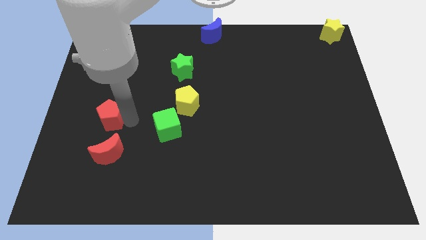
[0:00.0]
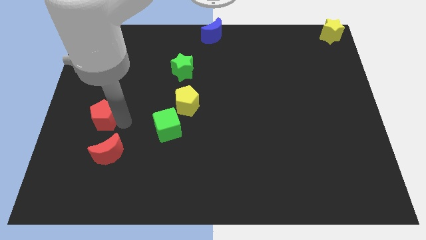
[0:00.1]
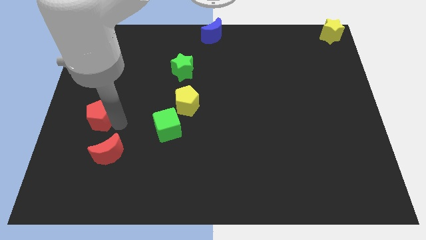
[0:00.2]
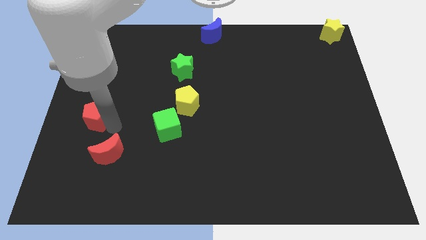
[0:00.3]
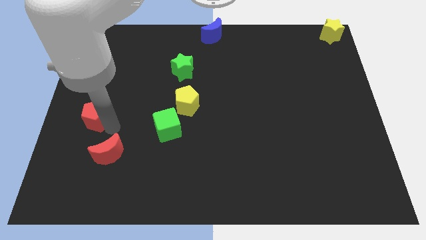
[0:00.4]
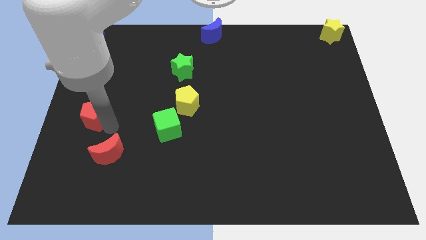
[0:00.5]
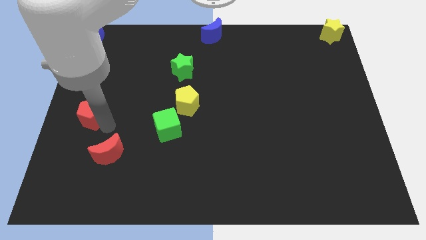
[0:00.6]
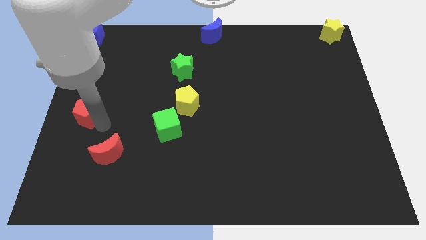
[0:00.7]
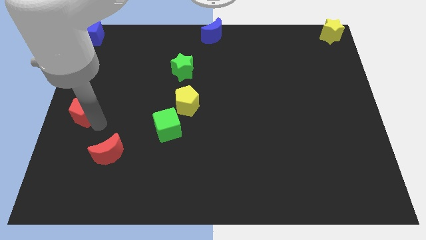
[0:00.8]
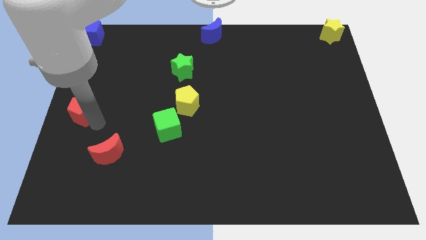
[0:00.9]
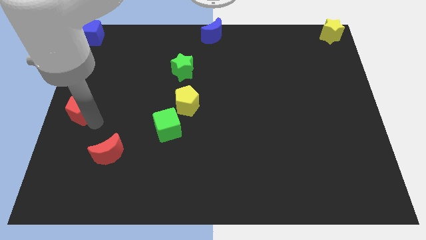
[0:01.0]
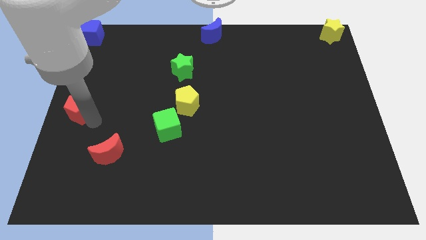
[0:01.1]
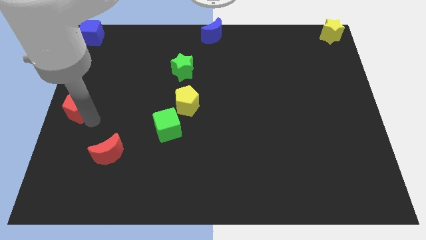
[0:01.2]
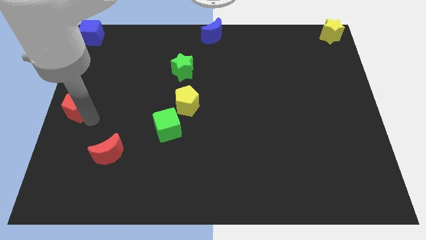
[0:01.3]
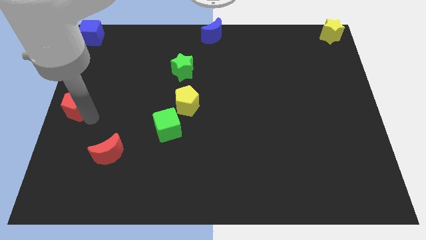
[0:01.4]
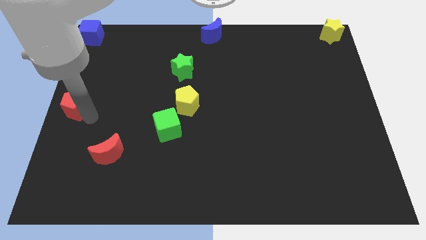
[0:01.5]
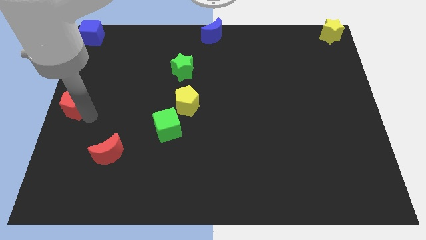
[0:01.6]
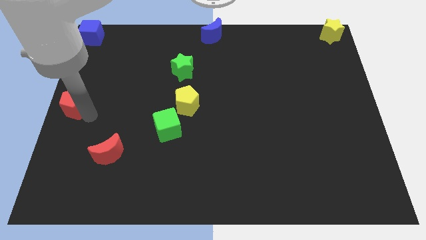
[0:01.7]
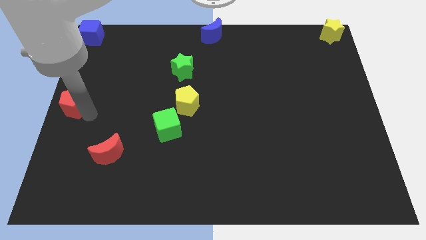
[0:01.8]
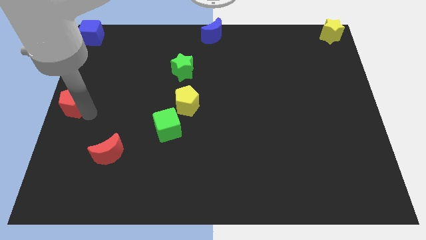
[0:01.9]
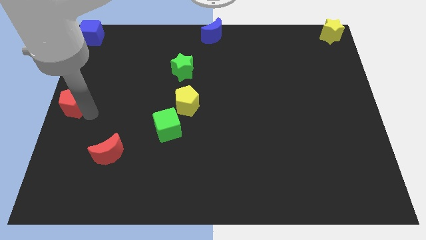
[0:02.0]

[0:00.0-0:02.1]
place the red pentagon towards the left center of the board

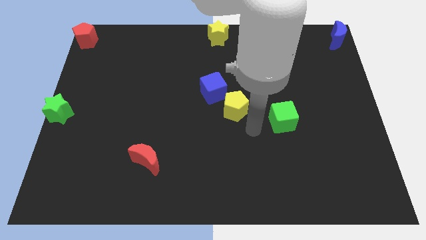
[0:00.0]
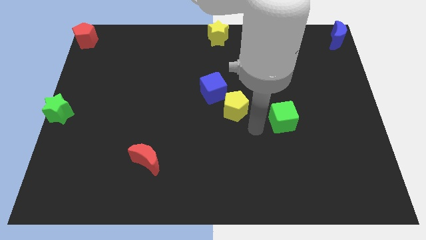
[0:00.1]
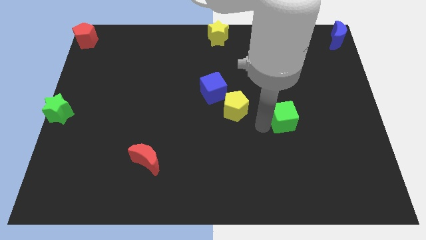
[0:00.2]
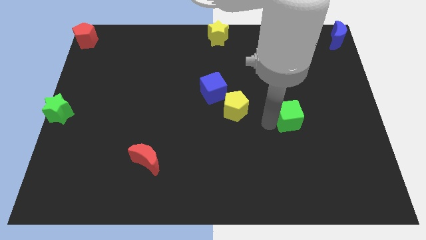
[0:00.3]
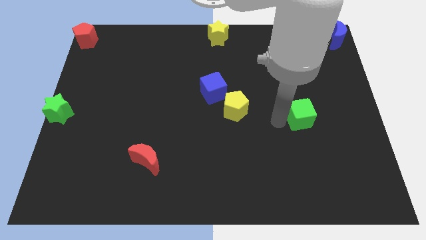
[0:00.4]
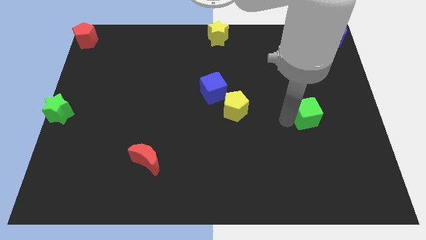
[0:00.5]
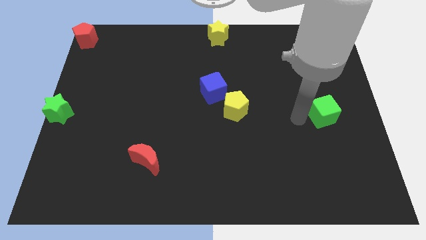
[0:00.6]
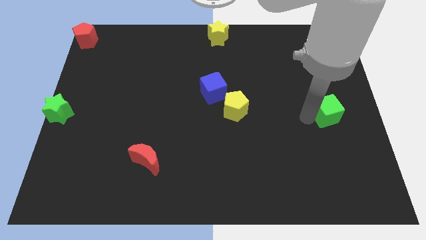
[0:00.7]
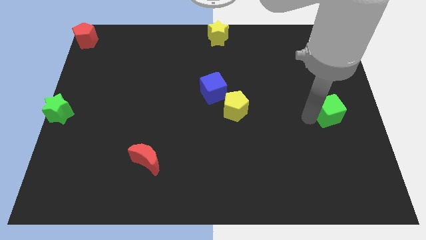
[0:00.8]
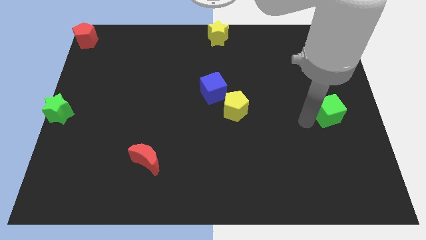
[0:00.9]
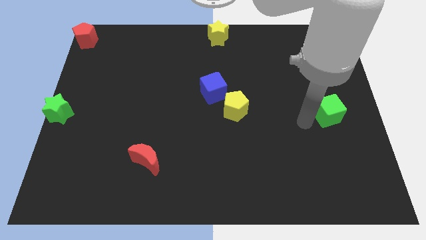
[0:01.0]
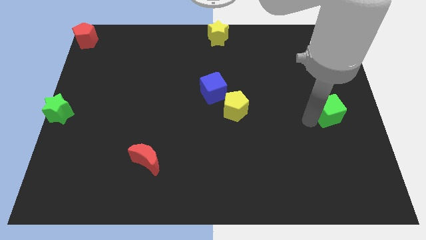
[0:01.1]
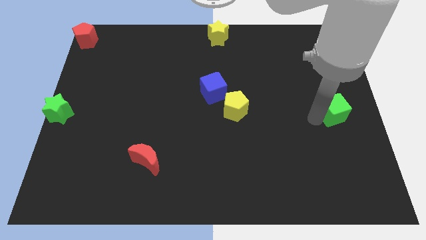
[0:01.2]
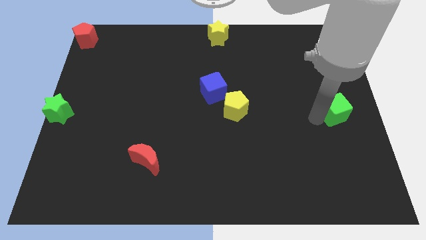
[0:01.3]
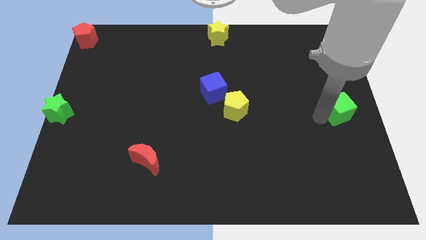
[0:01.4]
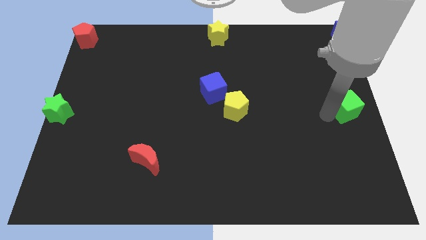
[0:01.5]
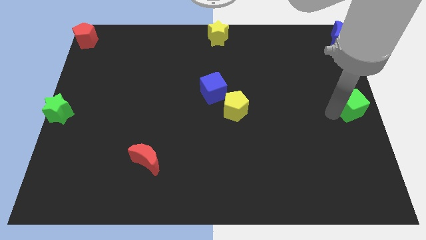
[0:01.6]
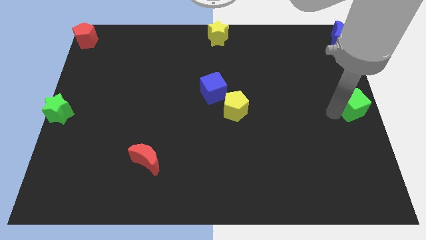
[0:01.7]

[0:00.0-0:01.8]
push the green cube to the right center of the board

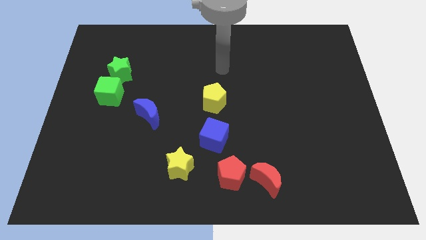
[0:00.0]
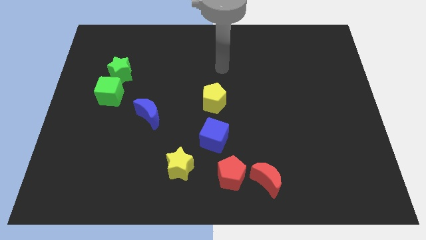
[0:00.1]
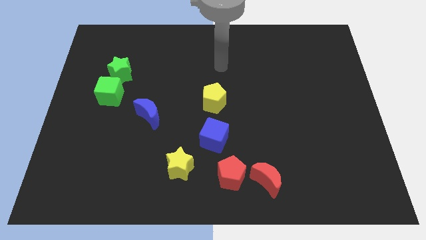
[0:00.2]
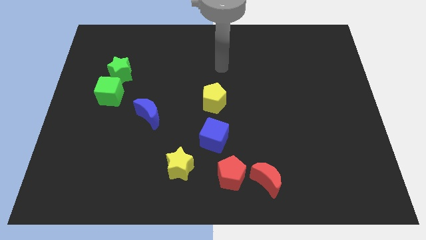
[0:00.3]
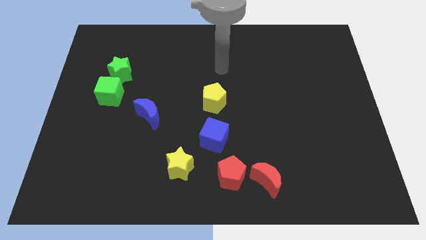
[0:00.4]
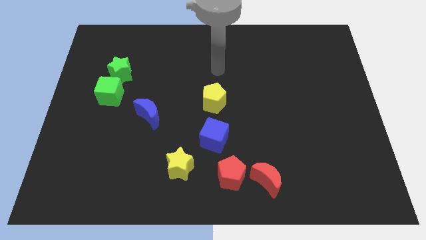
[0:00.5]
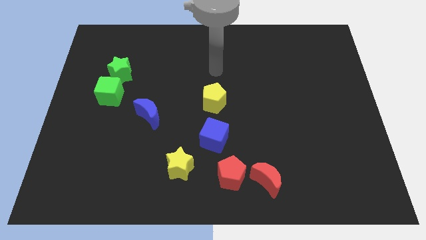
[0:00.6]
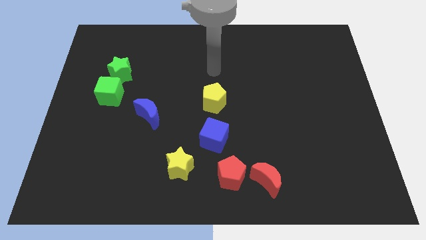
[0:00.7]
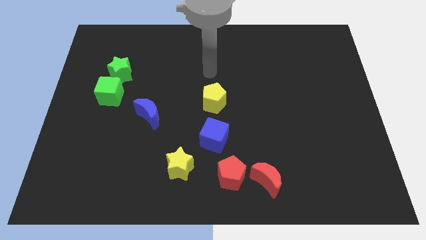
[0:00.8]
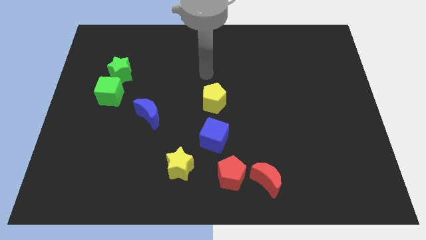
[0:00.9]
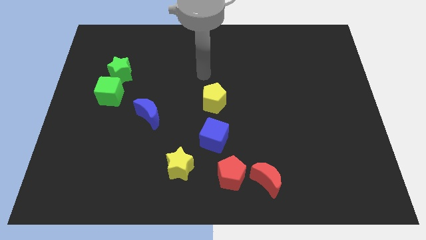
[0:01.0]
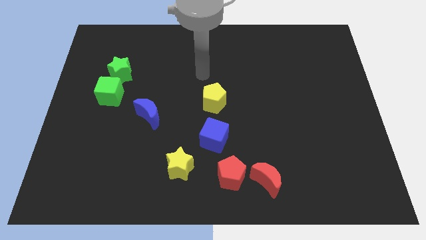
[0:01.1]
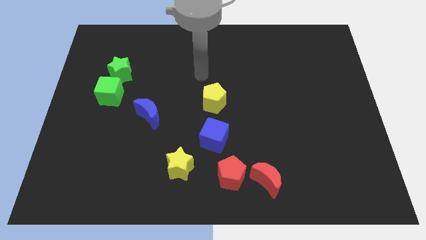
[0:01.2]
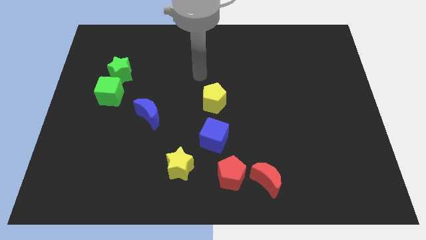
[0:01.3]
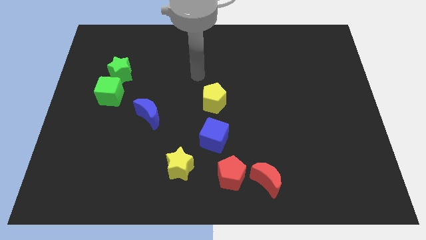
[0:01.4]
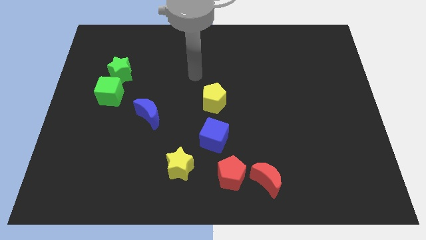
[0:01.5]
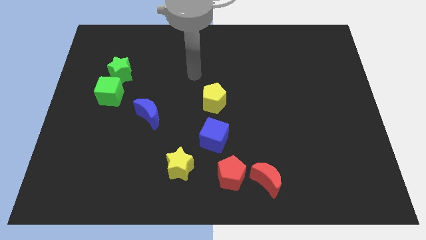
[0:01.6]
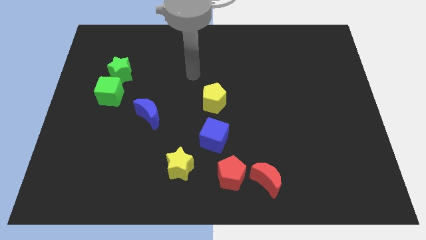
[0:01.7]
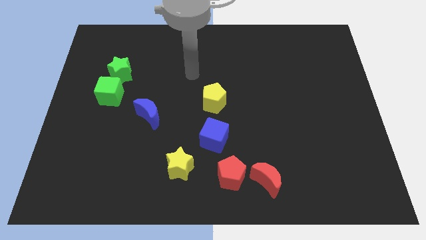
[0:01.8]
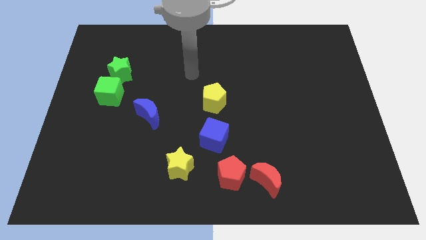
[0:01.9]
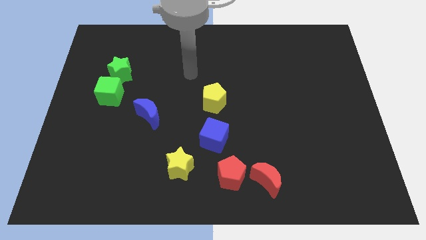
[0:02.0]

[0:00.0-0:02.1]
point your arm at the top left of the yellow pentagon

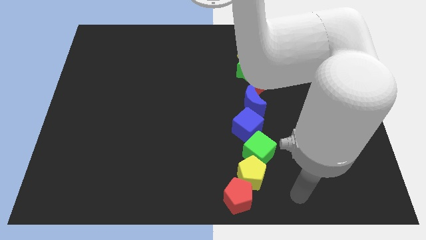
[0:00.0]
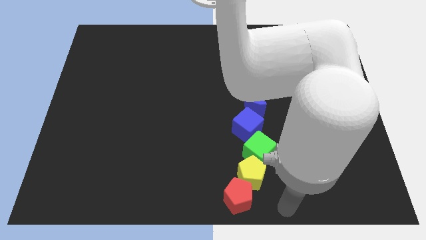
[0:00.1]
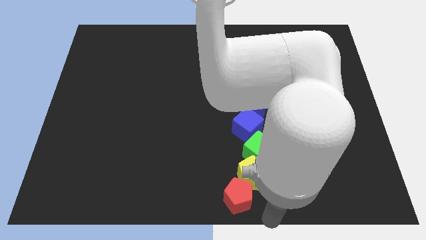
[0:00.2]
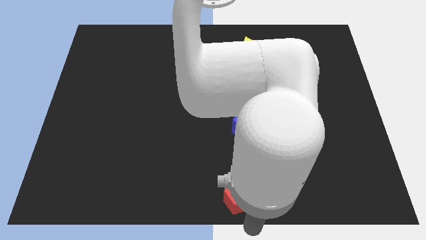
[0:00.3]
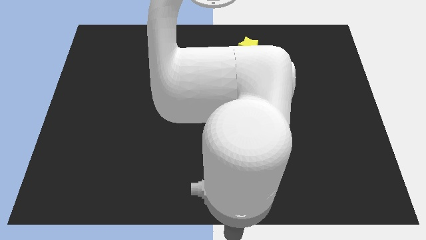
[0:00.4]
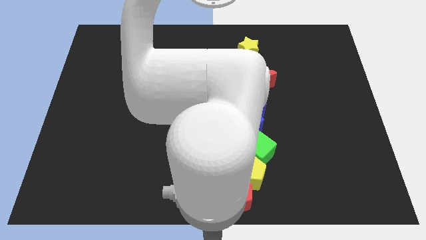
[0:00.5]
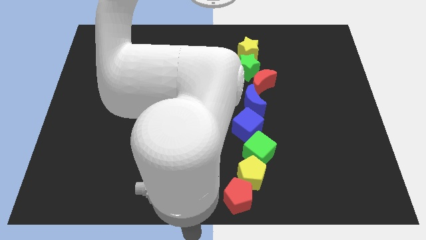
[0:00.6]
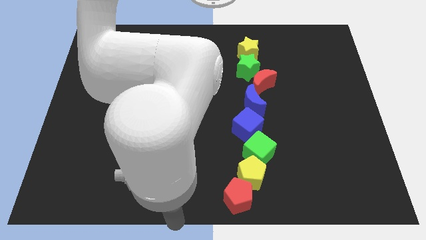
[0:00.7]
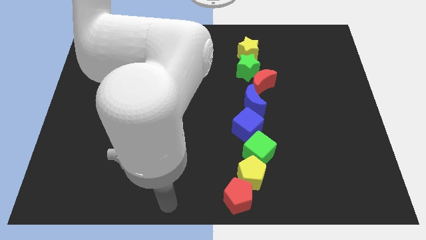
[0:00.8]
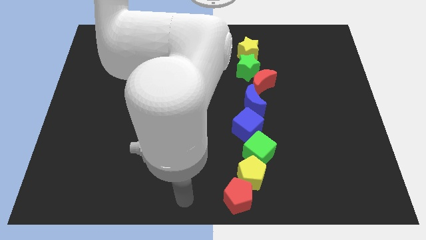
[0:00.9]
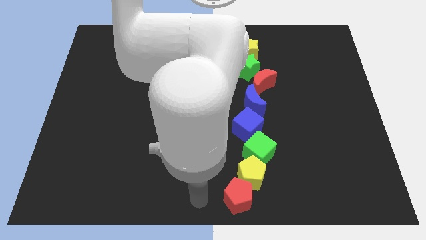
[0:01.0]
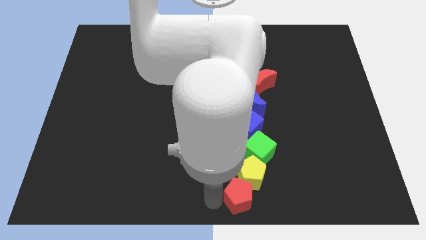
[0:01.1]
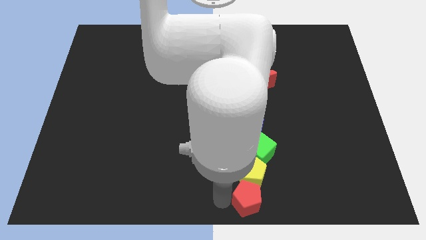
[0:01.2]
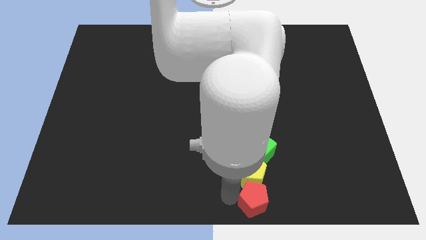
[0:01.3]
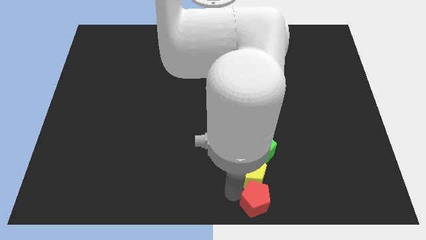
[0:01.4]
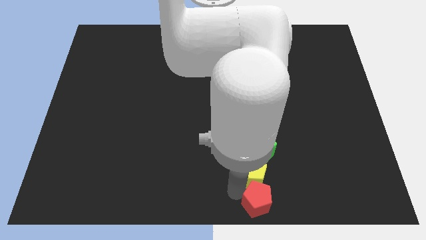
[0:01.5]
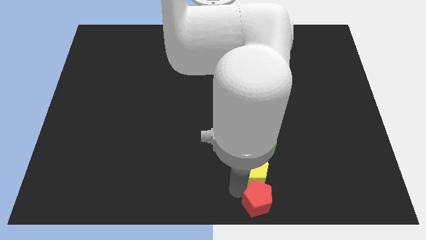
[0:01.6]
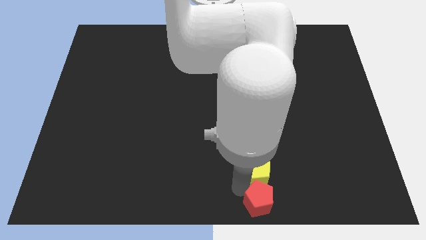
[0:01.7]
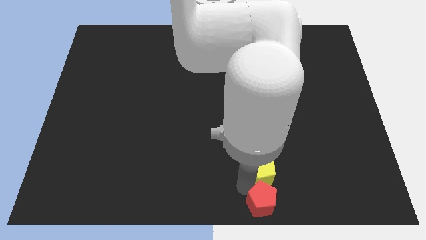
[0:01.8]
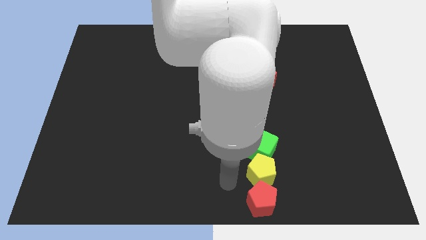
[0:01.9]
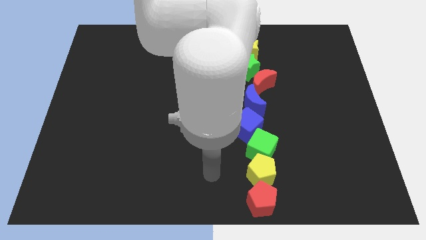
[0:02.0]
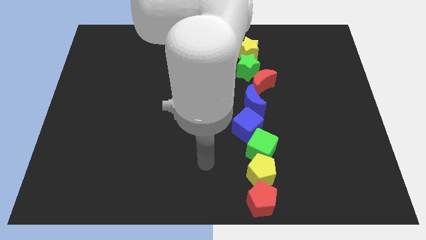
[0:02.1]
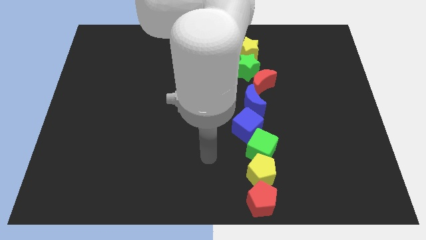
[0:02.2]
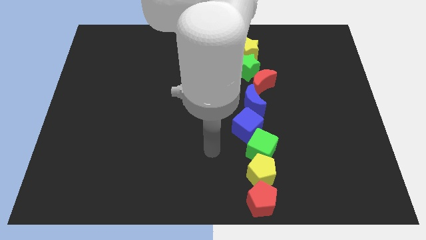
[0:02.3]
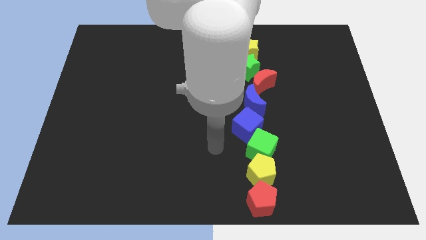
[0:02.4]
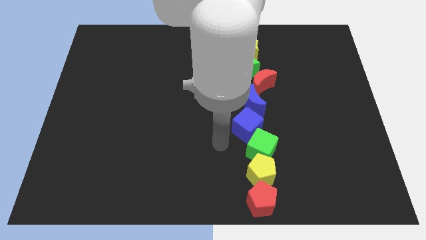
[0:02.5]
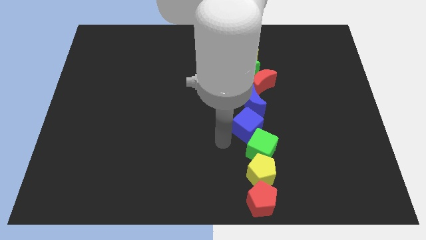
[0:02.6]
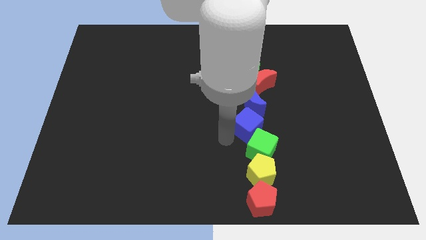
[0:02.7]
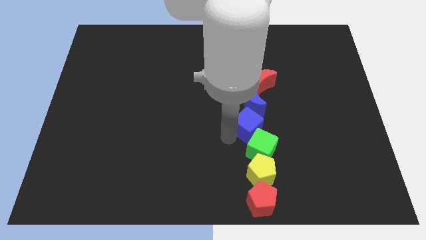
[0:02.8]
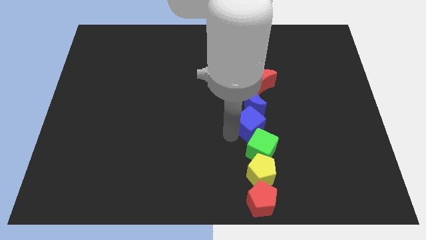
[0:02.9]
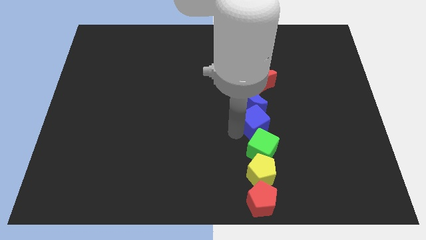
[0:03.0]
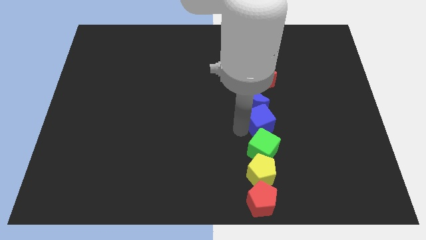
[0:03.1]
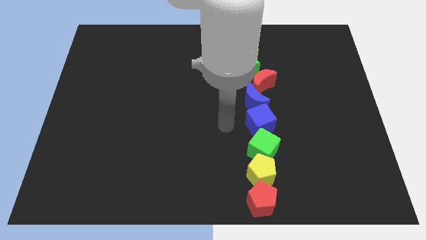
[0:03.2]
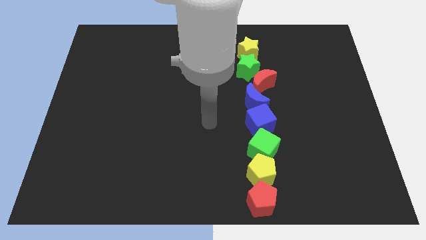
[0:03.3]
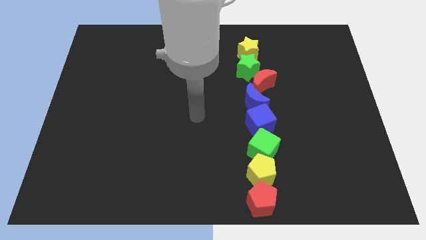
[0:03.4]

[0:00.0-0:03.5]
place both cubes and pentagons in a vertical row
